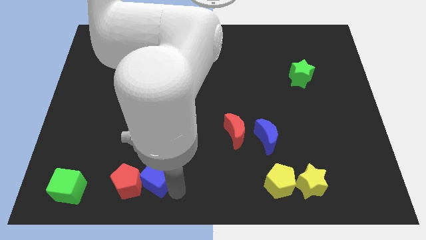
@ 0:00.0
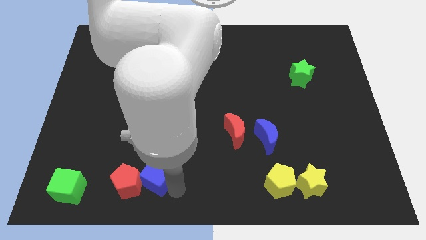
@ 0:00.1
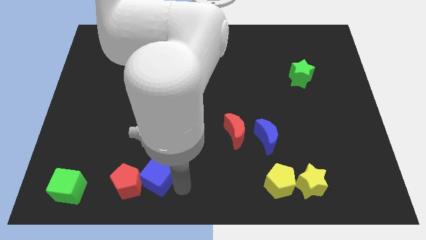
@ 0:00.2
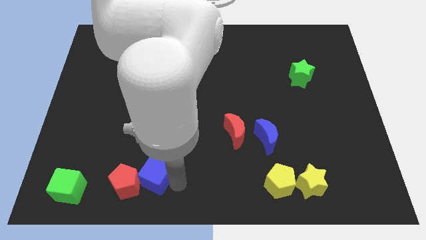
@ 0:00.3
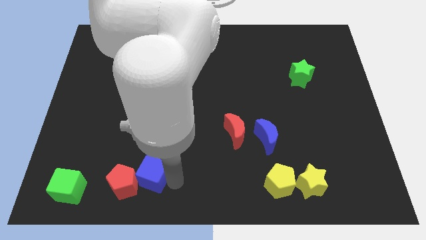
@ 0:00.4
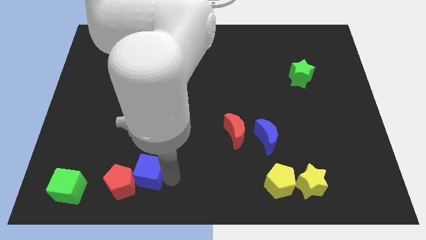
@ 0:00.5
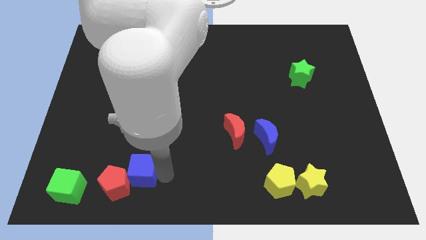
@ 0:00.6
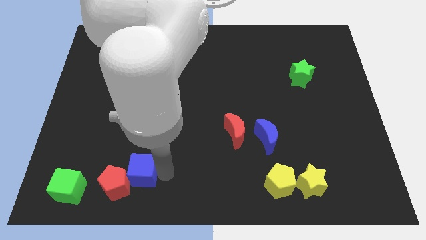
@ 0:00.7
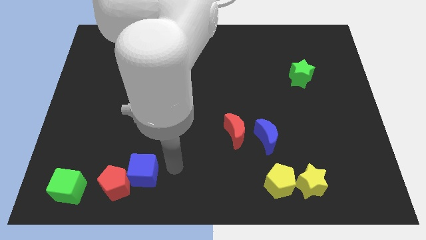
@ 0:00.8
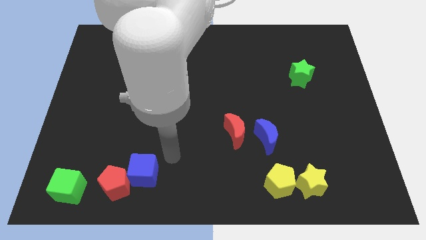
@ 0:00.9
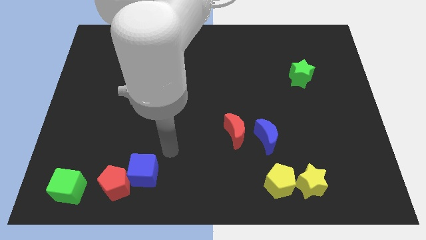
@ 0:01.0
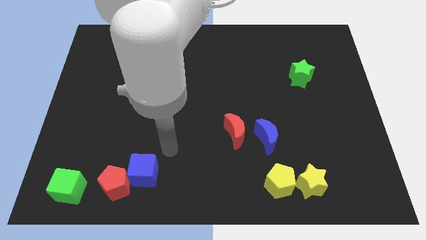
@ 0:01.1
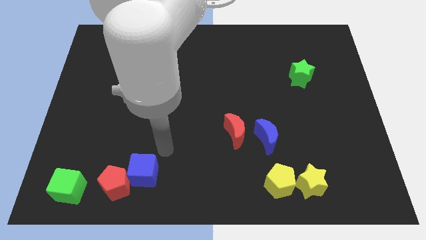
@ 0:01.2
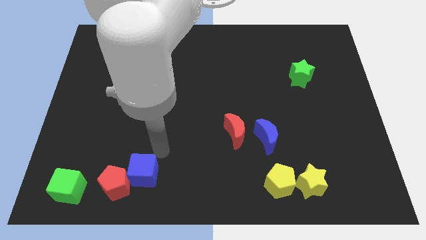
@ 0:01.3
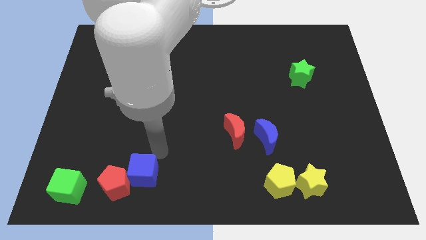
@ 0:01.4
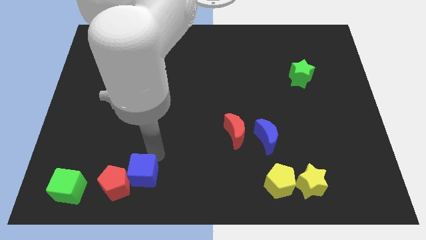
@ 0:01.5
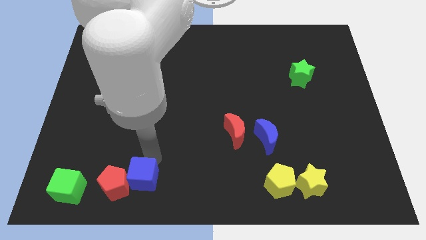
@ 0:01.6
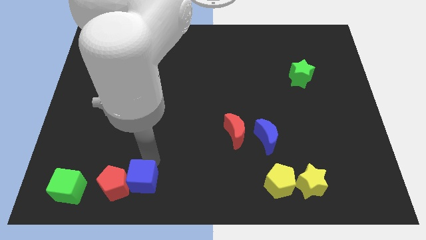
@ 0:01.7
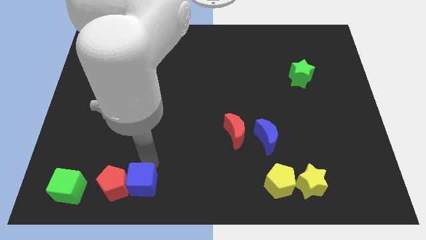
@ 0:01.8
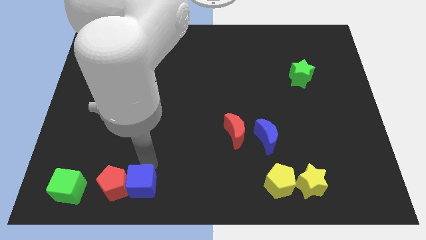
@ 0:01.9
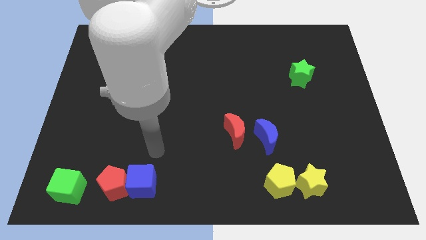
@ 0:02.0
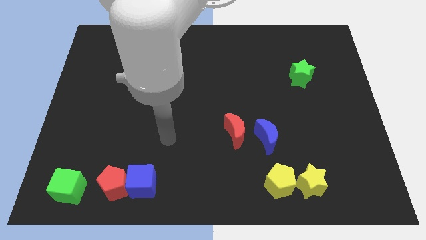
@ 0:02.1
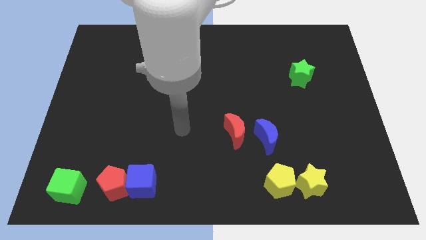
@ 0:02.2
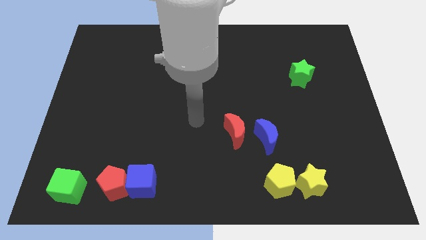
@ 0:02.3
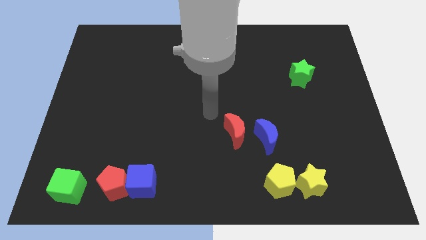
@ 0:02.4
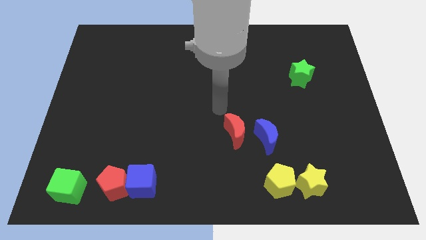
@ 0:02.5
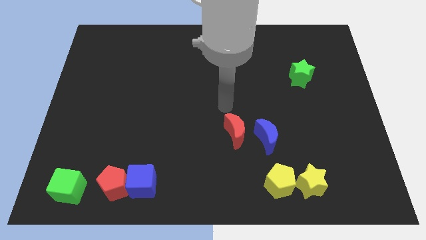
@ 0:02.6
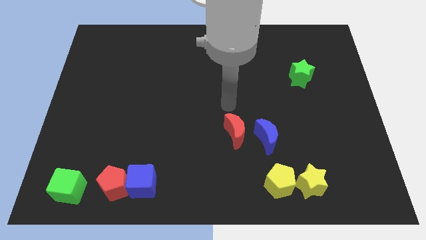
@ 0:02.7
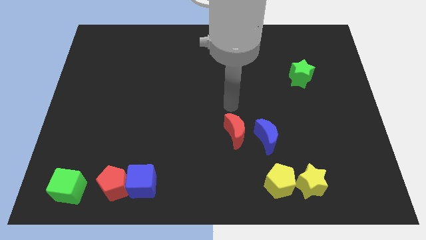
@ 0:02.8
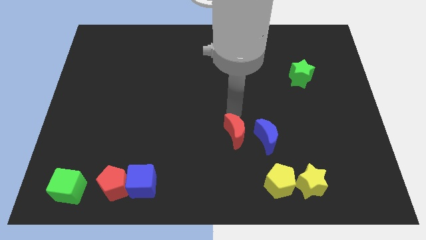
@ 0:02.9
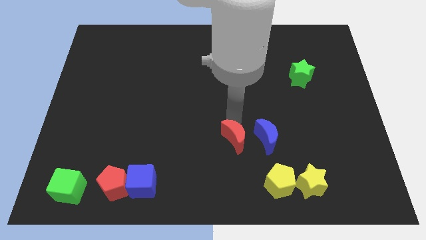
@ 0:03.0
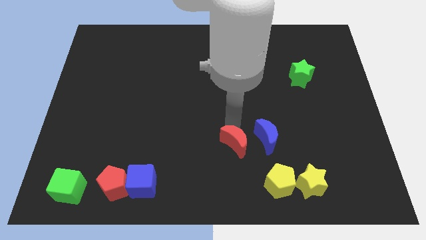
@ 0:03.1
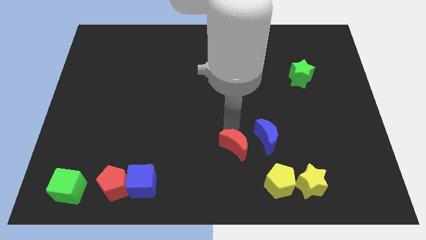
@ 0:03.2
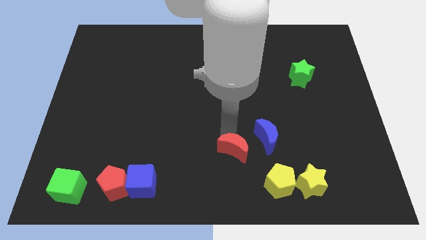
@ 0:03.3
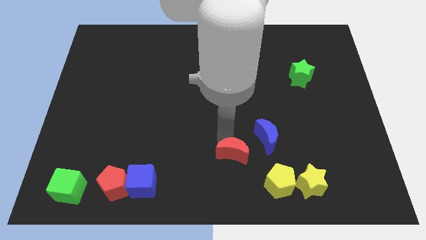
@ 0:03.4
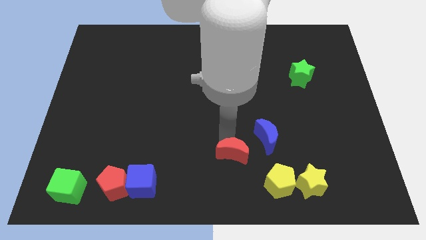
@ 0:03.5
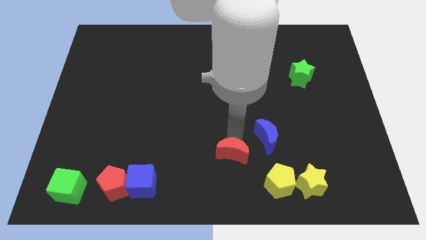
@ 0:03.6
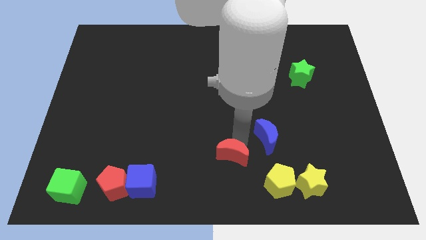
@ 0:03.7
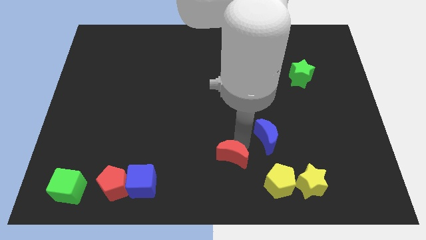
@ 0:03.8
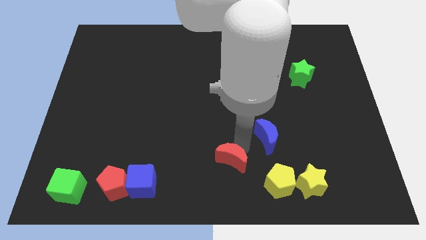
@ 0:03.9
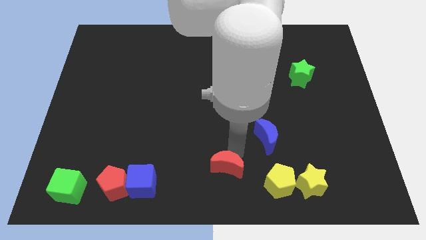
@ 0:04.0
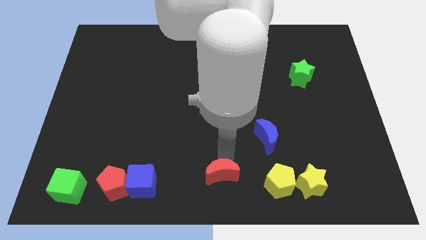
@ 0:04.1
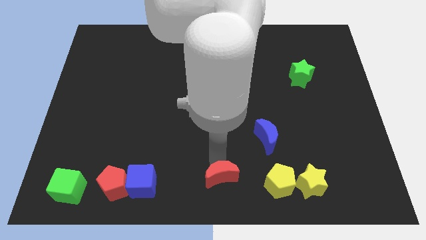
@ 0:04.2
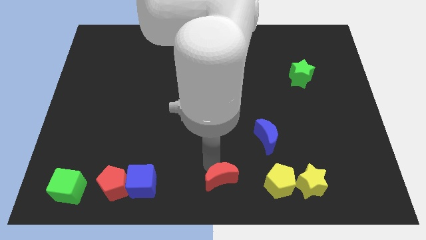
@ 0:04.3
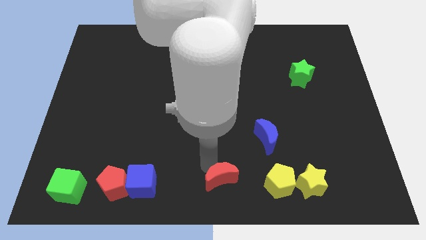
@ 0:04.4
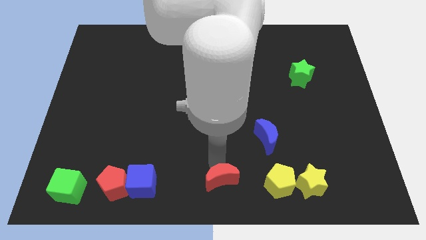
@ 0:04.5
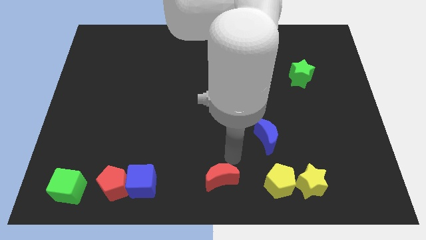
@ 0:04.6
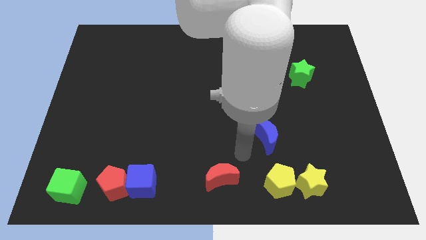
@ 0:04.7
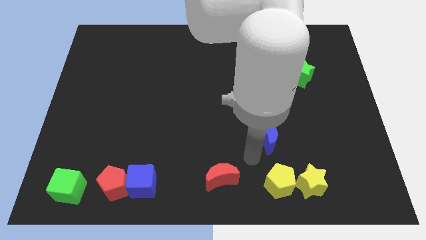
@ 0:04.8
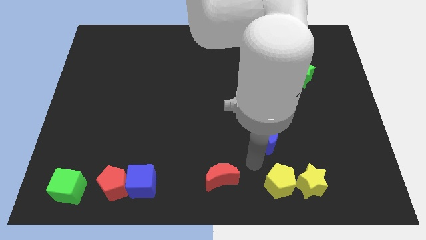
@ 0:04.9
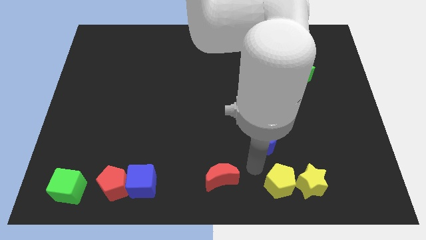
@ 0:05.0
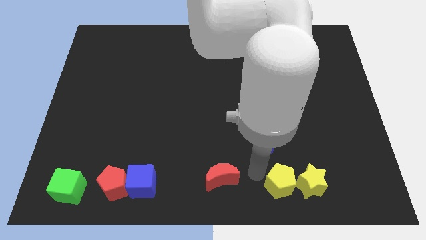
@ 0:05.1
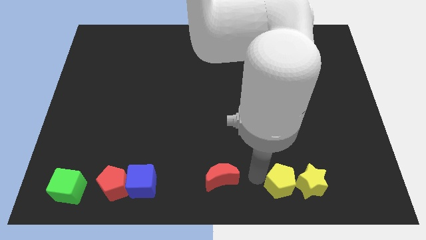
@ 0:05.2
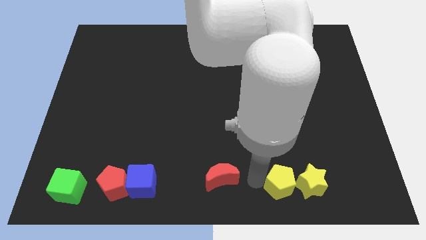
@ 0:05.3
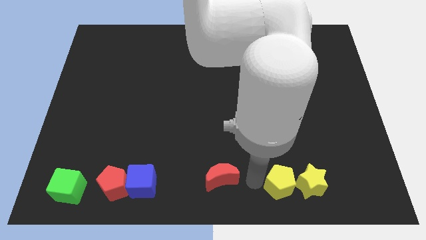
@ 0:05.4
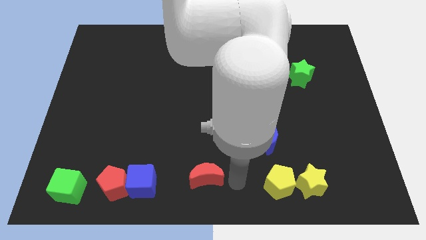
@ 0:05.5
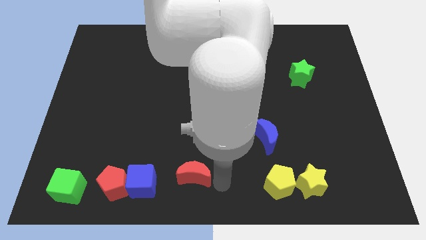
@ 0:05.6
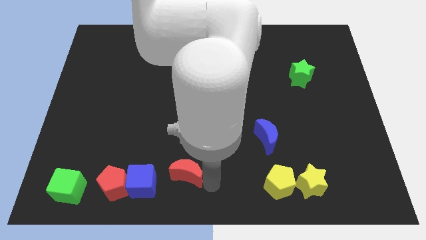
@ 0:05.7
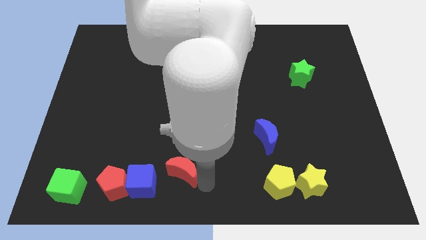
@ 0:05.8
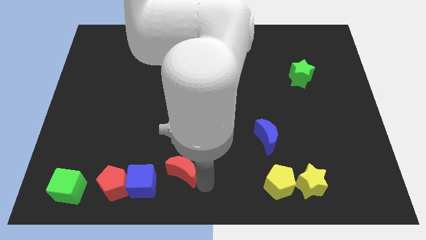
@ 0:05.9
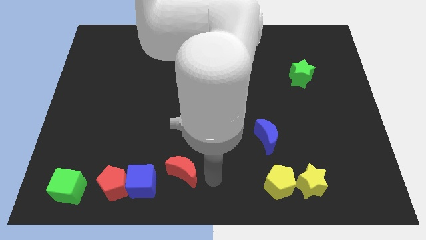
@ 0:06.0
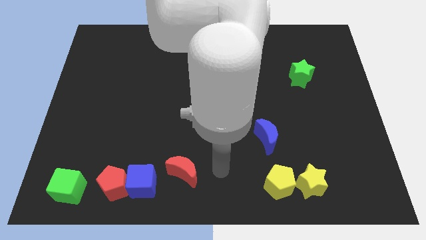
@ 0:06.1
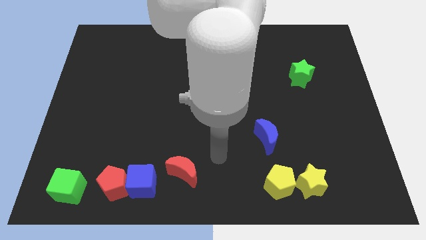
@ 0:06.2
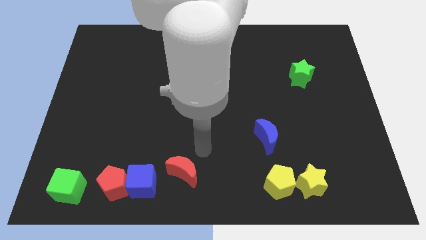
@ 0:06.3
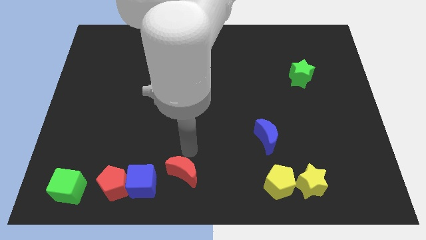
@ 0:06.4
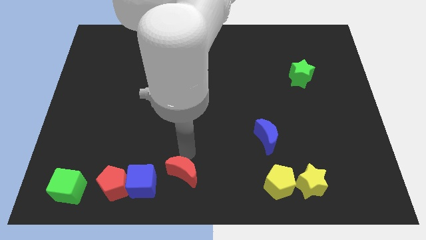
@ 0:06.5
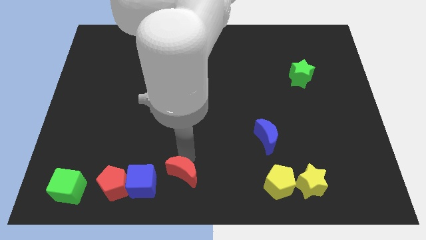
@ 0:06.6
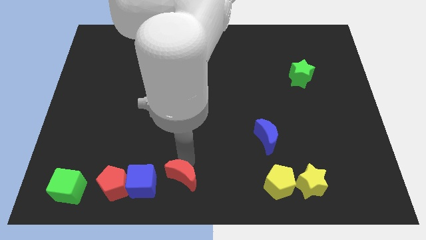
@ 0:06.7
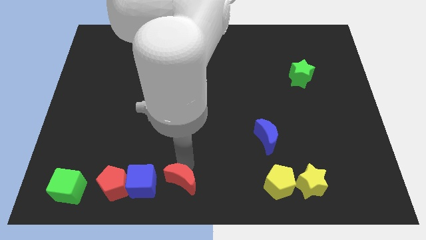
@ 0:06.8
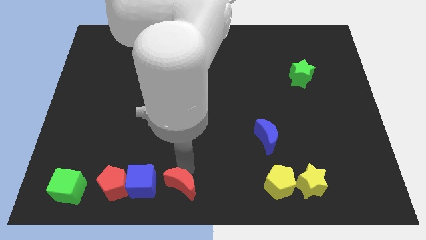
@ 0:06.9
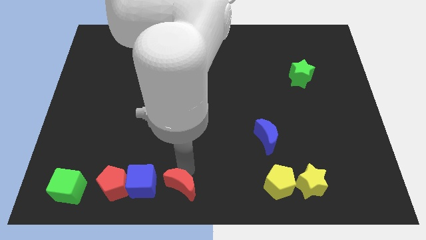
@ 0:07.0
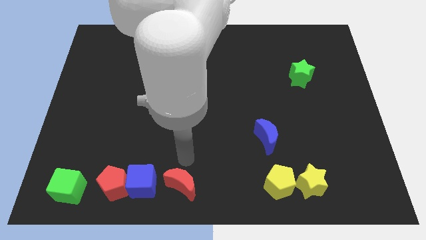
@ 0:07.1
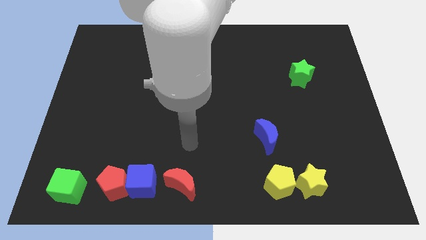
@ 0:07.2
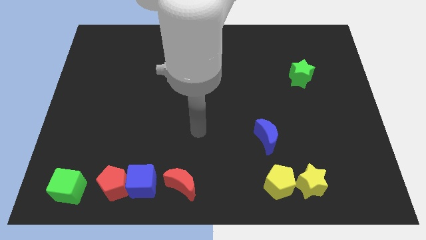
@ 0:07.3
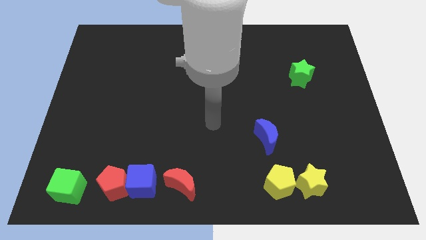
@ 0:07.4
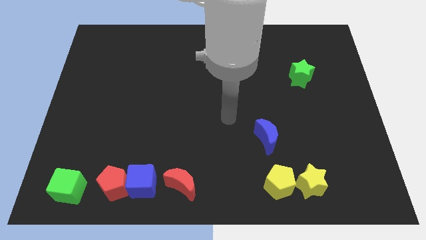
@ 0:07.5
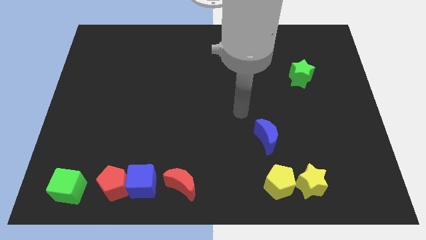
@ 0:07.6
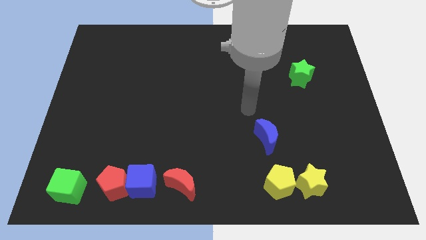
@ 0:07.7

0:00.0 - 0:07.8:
move the red crescent to right side of the blue cube

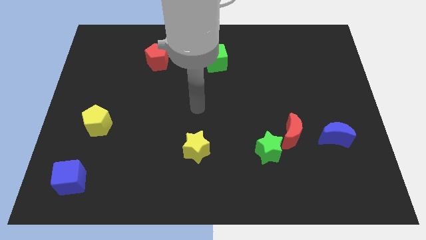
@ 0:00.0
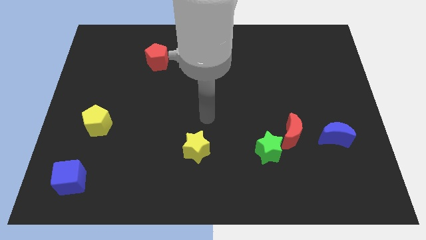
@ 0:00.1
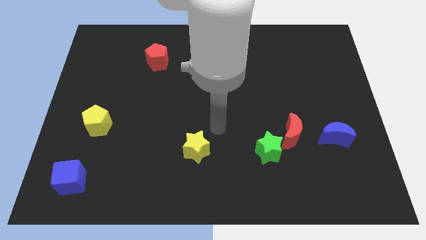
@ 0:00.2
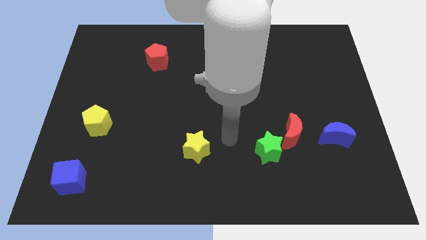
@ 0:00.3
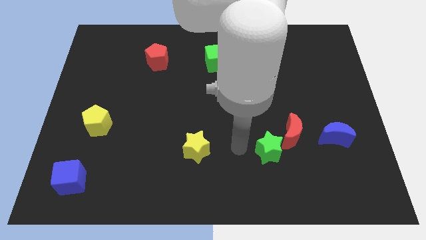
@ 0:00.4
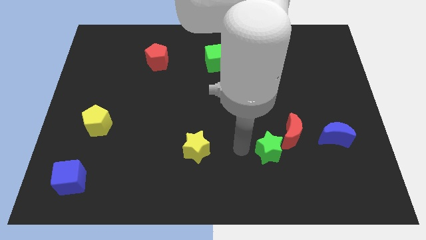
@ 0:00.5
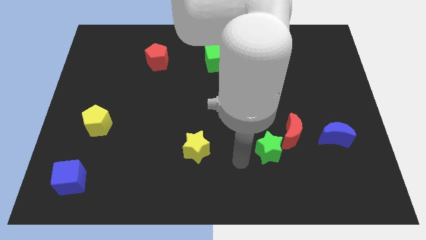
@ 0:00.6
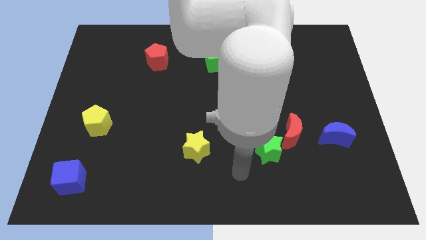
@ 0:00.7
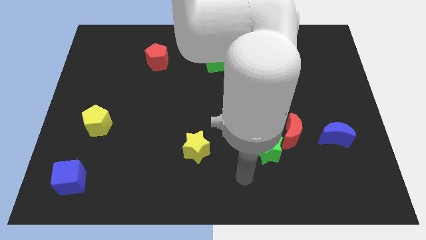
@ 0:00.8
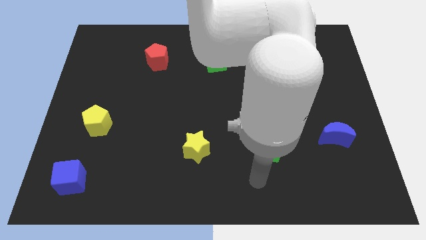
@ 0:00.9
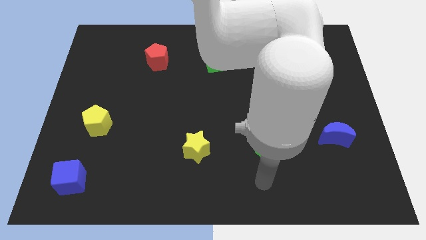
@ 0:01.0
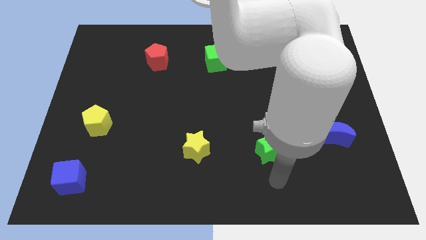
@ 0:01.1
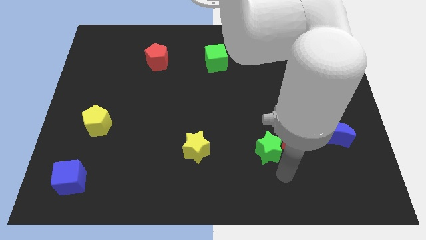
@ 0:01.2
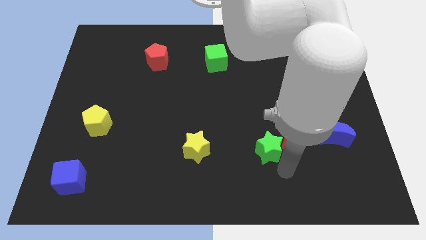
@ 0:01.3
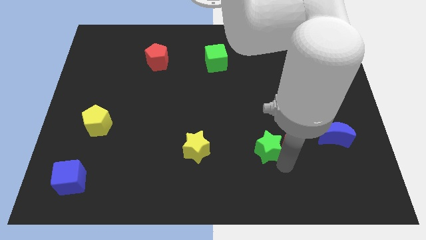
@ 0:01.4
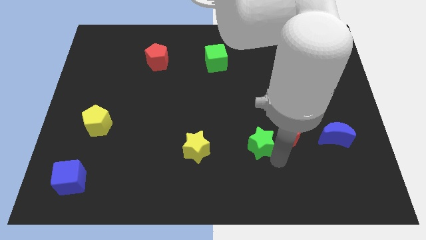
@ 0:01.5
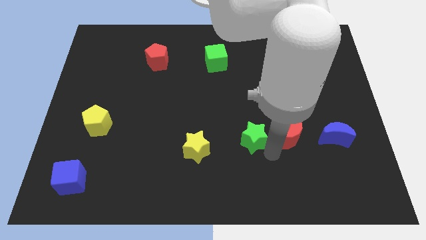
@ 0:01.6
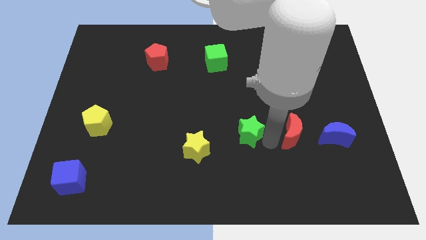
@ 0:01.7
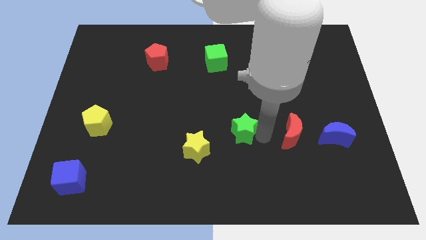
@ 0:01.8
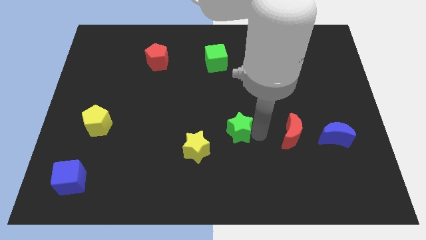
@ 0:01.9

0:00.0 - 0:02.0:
move the arm towards the green star
